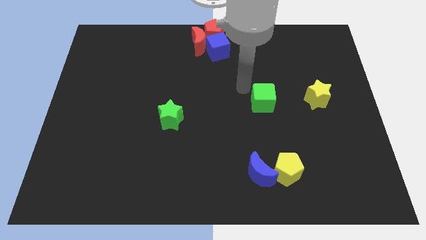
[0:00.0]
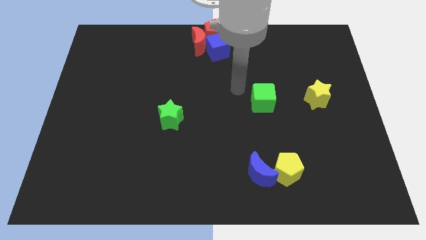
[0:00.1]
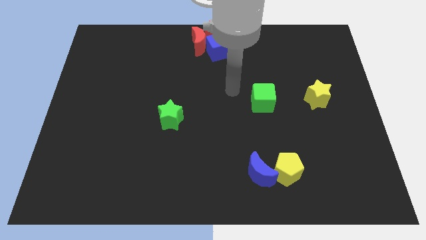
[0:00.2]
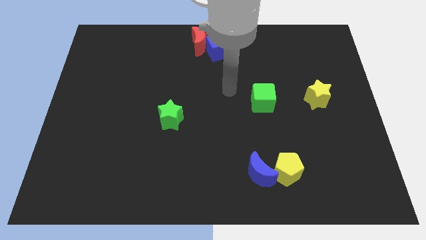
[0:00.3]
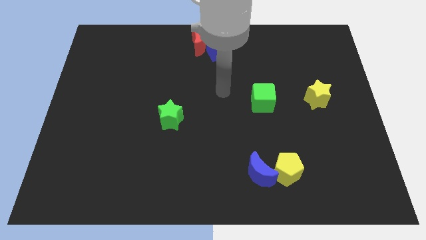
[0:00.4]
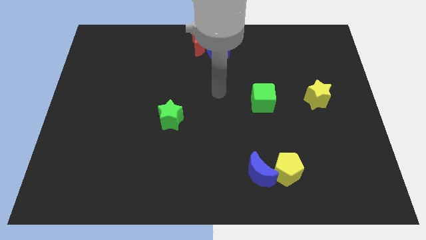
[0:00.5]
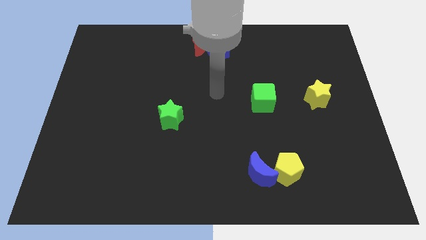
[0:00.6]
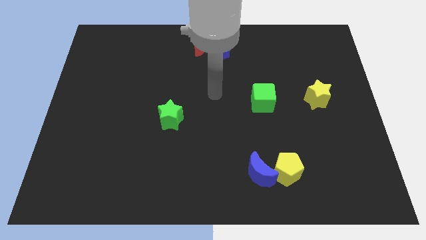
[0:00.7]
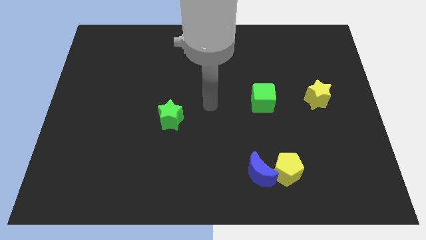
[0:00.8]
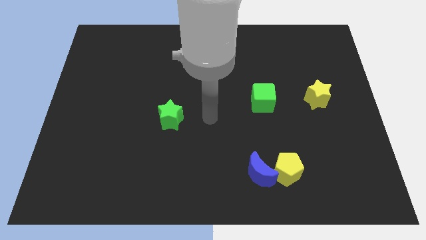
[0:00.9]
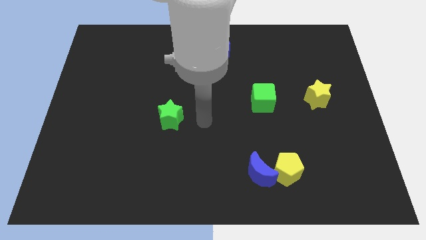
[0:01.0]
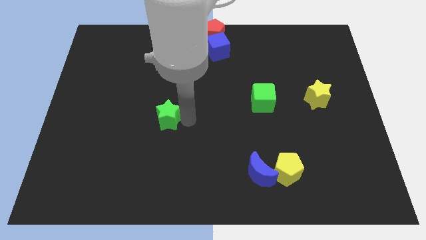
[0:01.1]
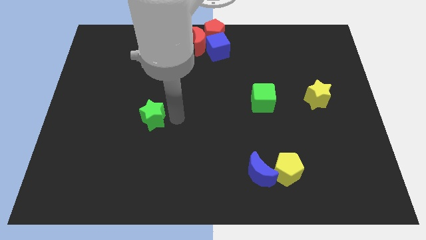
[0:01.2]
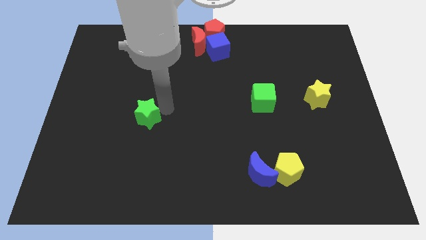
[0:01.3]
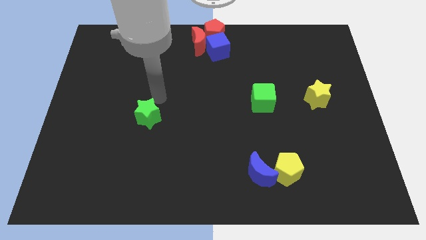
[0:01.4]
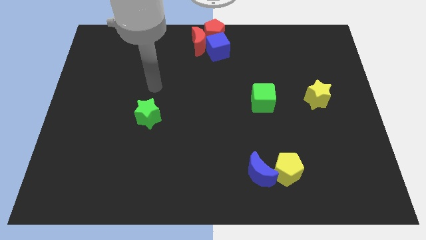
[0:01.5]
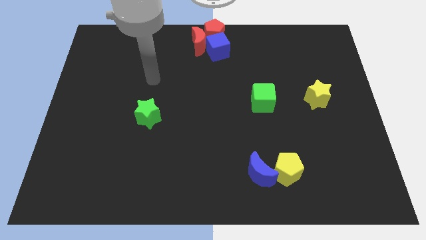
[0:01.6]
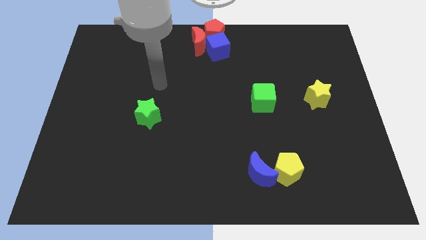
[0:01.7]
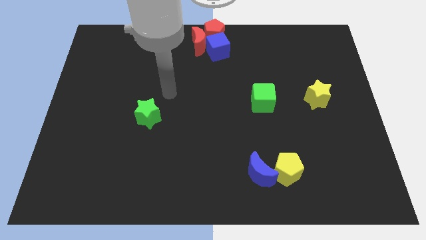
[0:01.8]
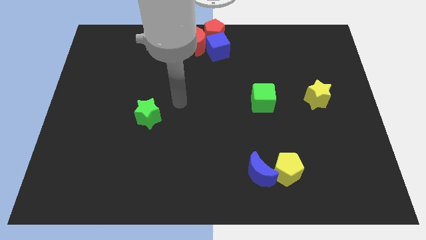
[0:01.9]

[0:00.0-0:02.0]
push the green star slightly to the left

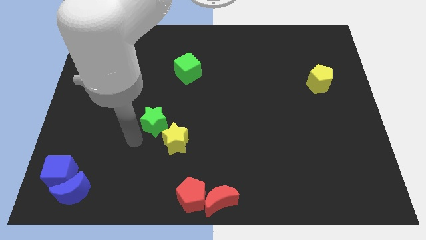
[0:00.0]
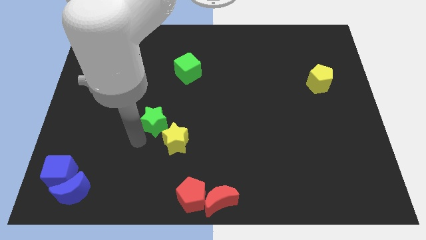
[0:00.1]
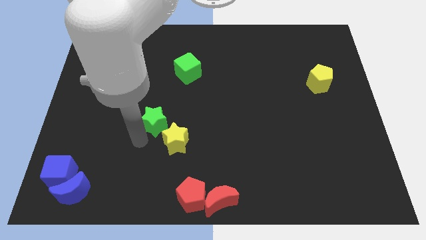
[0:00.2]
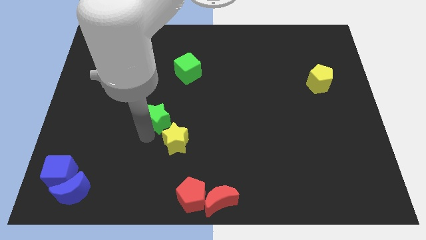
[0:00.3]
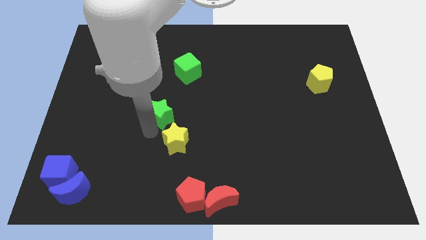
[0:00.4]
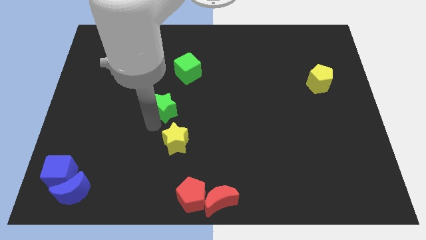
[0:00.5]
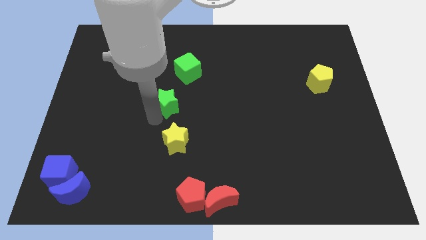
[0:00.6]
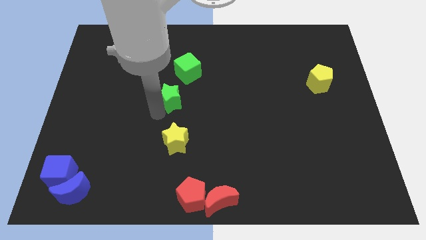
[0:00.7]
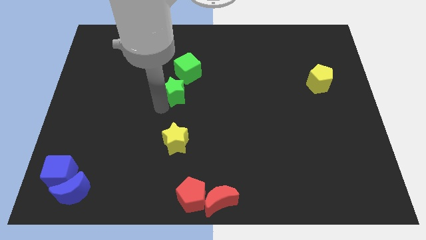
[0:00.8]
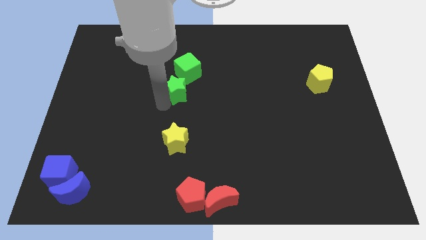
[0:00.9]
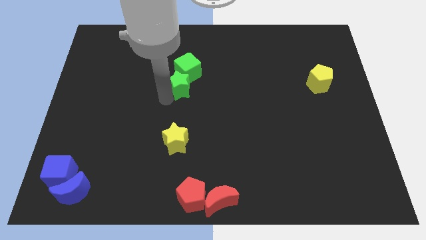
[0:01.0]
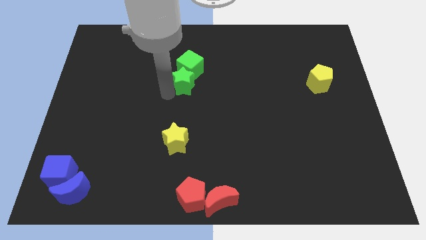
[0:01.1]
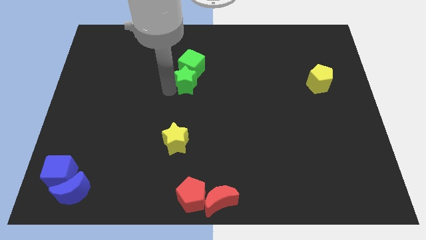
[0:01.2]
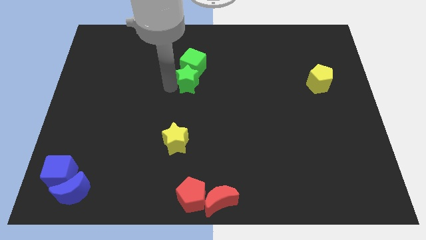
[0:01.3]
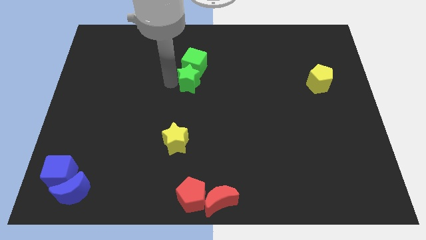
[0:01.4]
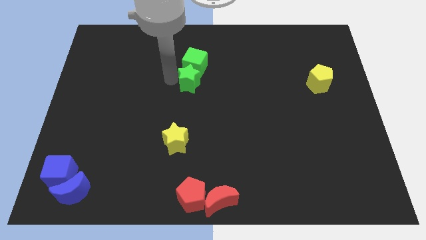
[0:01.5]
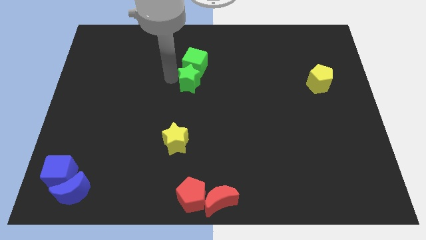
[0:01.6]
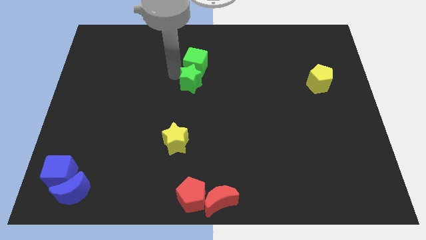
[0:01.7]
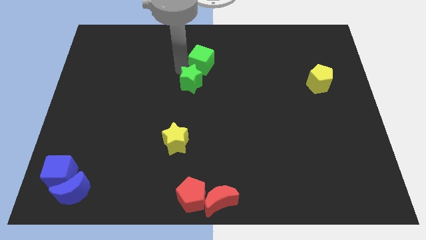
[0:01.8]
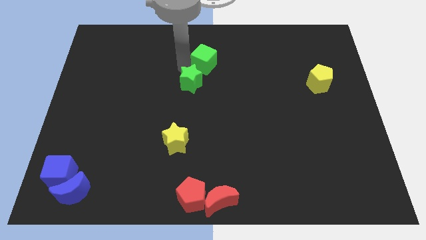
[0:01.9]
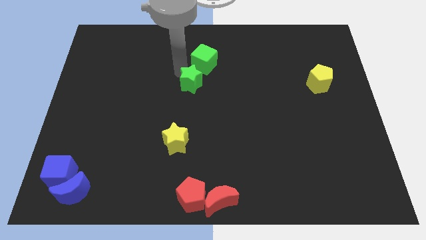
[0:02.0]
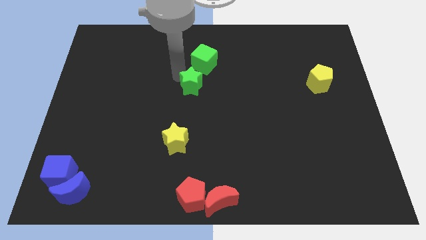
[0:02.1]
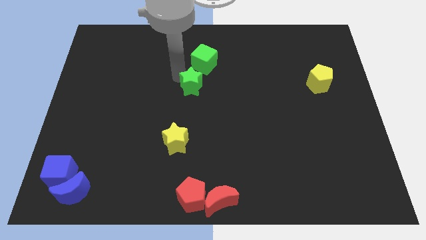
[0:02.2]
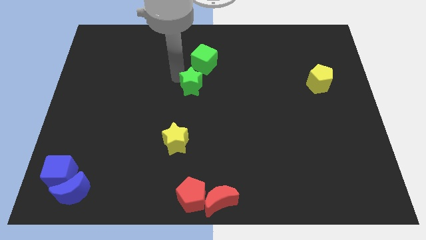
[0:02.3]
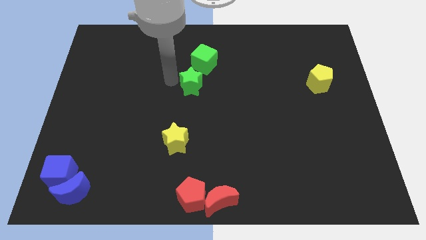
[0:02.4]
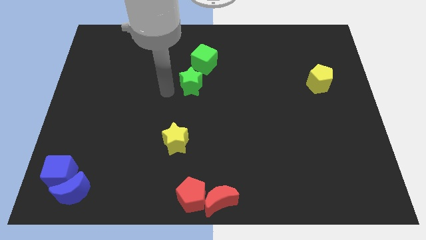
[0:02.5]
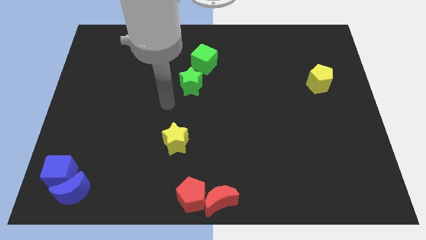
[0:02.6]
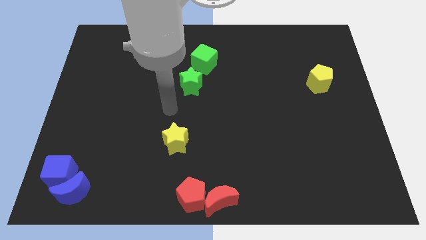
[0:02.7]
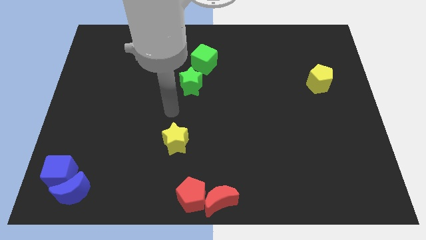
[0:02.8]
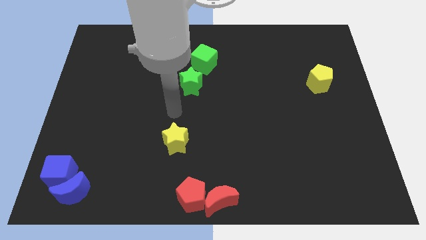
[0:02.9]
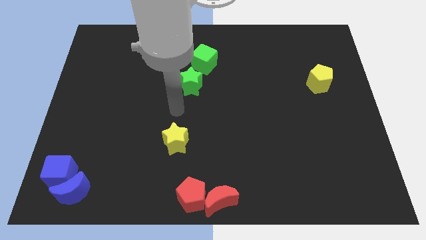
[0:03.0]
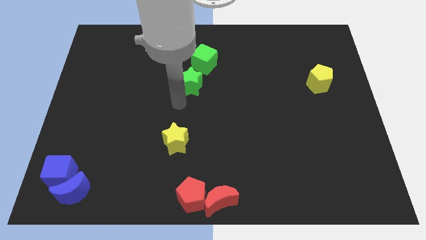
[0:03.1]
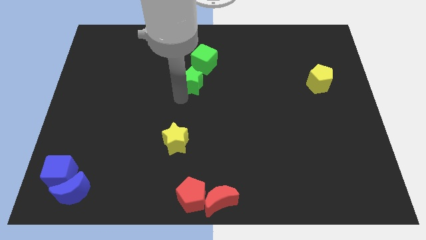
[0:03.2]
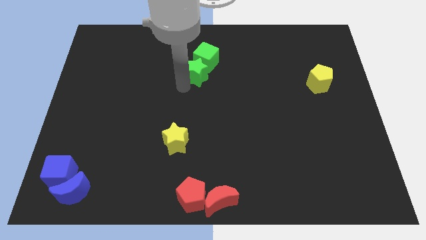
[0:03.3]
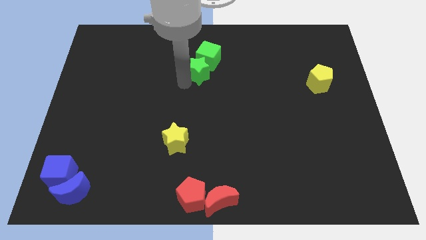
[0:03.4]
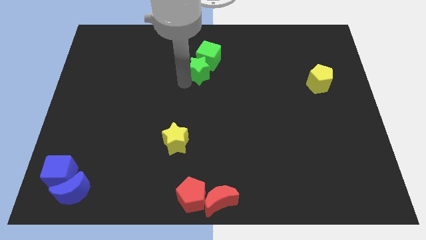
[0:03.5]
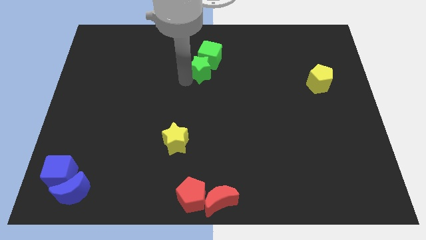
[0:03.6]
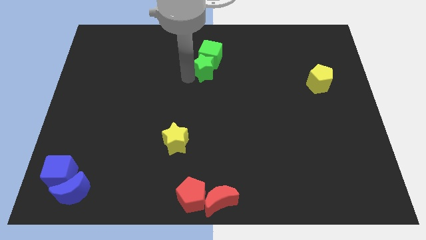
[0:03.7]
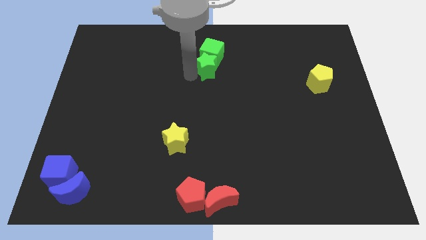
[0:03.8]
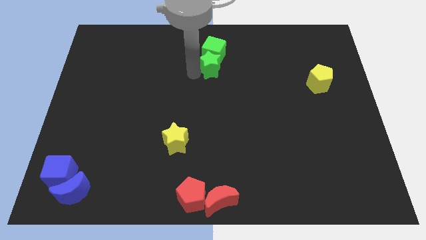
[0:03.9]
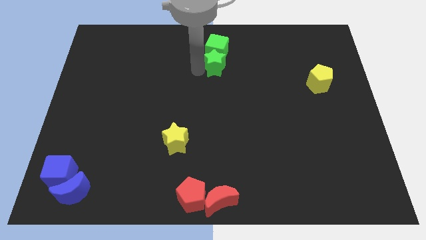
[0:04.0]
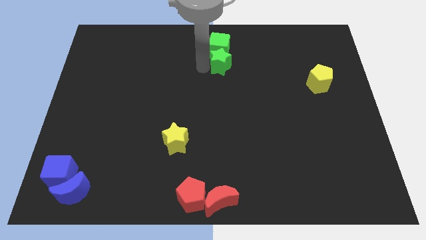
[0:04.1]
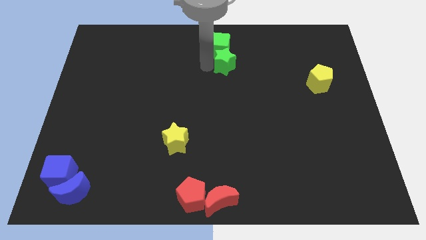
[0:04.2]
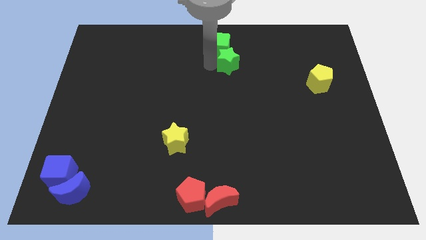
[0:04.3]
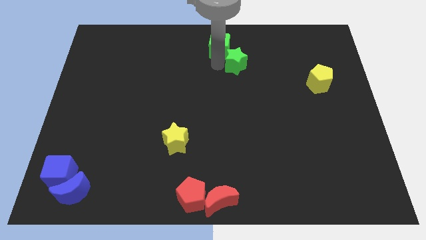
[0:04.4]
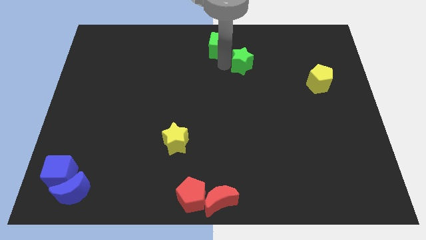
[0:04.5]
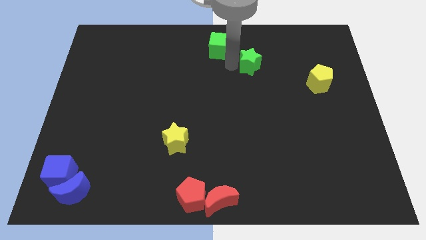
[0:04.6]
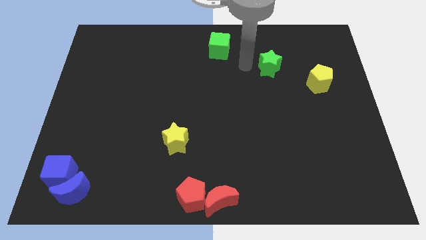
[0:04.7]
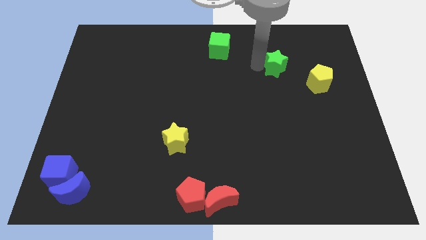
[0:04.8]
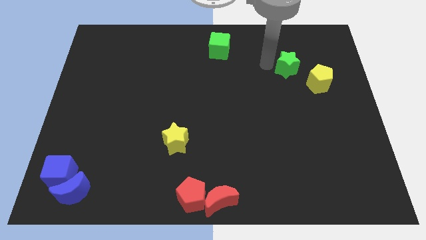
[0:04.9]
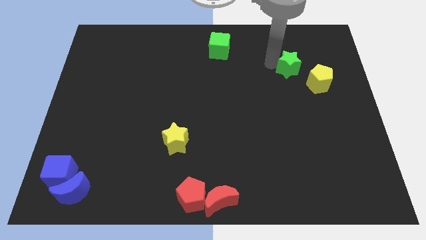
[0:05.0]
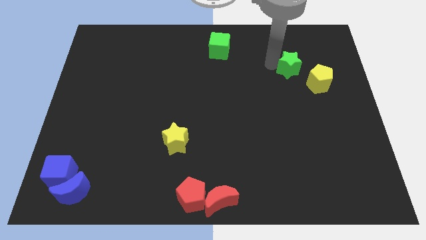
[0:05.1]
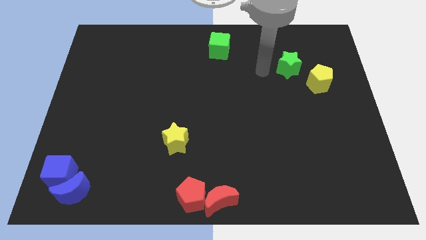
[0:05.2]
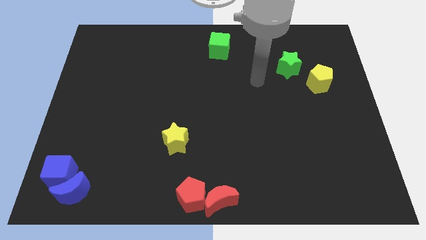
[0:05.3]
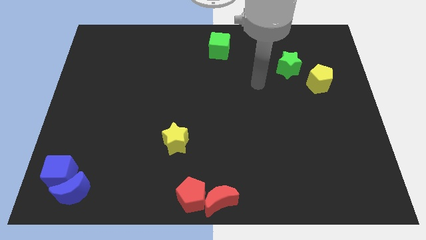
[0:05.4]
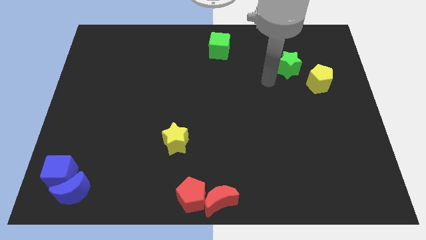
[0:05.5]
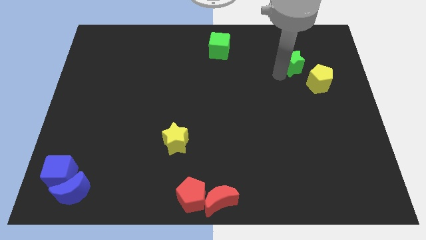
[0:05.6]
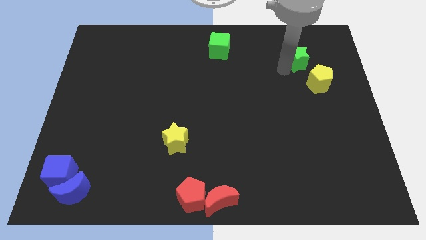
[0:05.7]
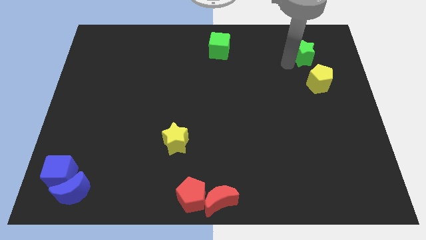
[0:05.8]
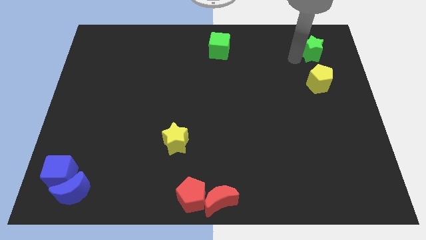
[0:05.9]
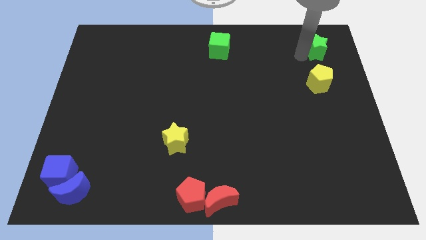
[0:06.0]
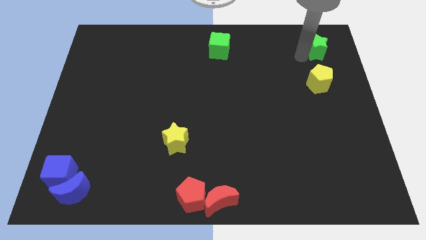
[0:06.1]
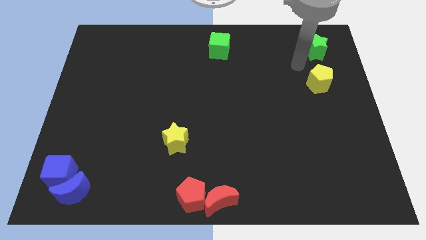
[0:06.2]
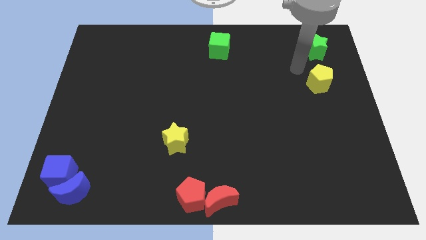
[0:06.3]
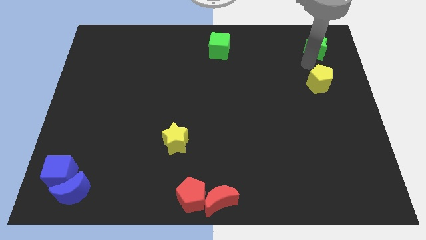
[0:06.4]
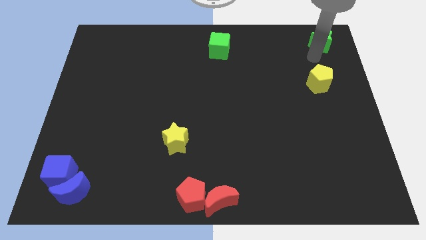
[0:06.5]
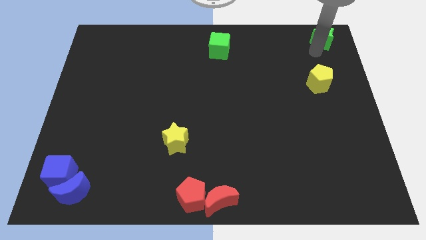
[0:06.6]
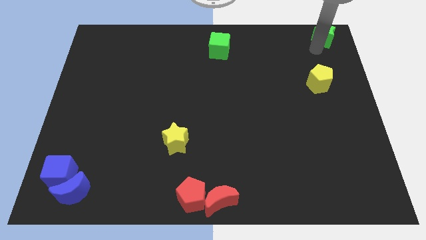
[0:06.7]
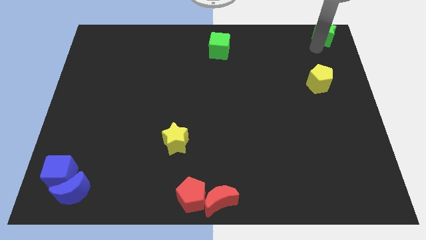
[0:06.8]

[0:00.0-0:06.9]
move the green star towards the top right corner

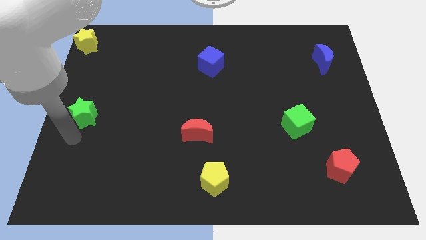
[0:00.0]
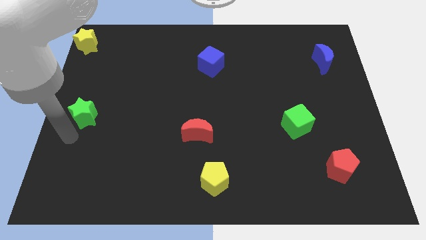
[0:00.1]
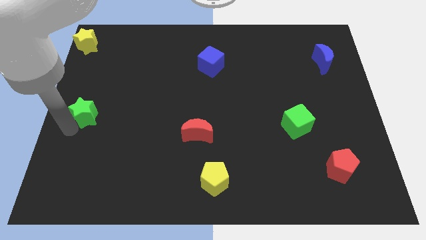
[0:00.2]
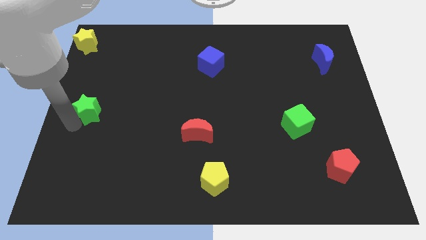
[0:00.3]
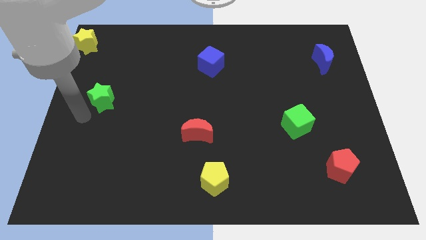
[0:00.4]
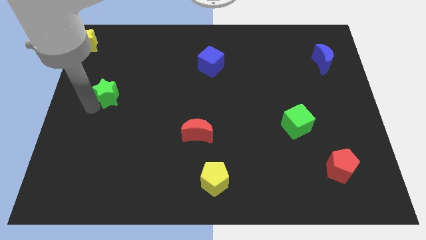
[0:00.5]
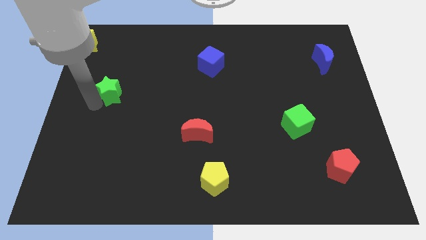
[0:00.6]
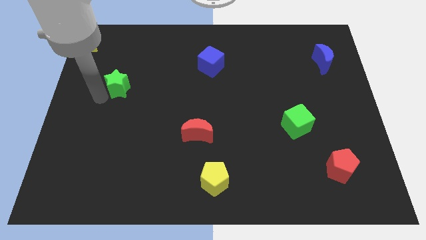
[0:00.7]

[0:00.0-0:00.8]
push green star diagonally to yellow star
